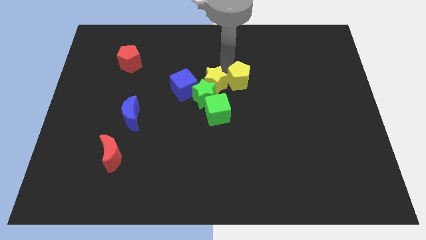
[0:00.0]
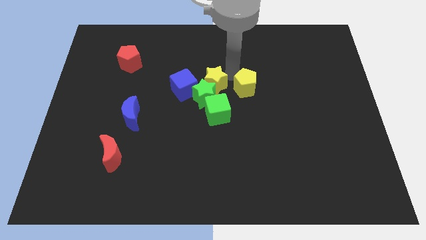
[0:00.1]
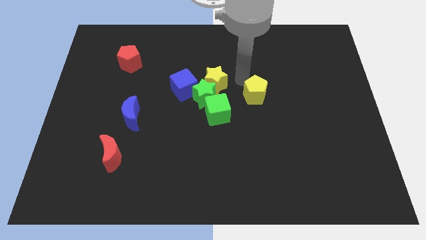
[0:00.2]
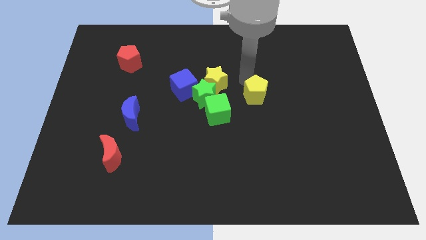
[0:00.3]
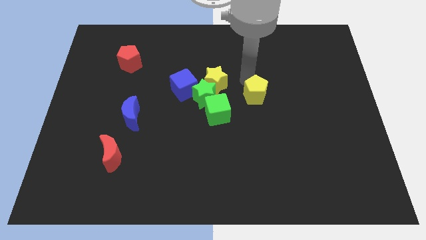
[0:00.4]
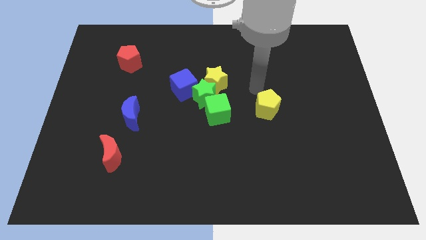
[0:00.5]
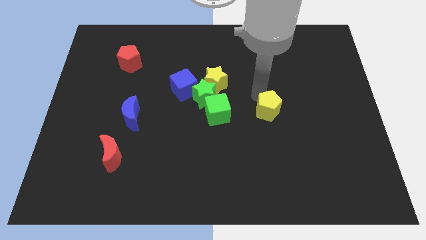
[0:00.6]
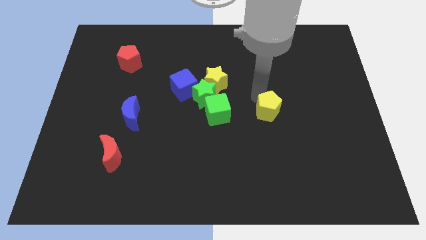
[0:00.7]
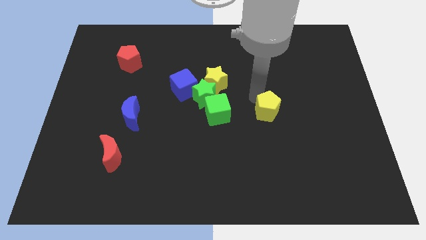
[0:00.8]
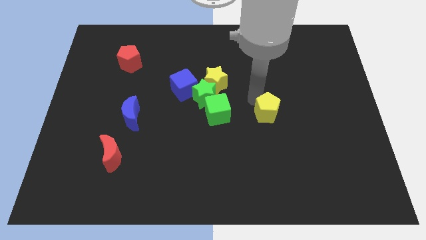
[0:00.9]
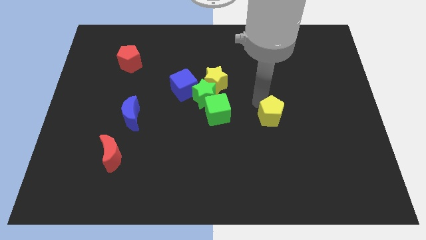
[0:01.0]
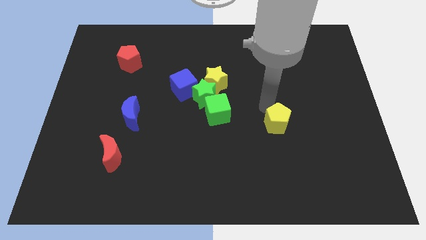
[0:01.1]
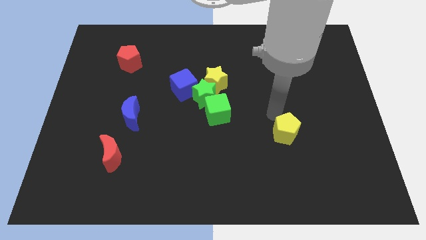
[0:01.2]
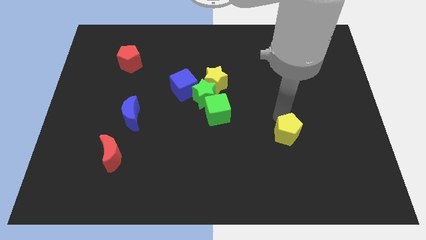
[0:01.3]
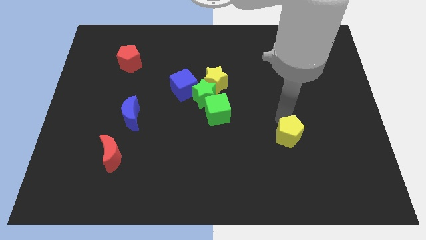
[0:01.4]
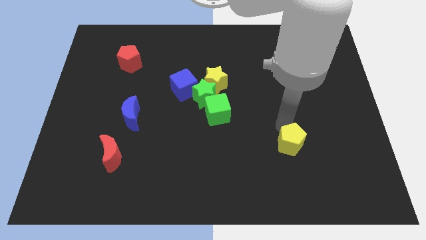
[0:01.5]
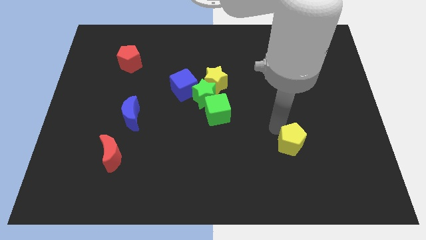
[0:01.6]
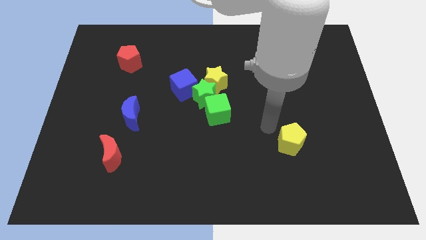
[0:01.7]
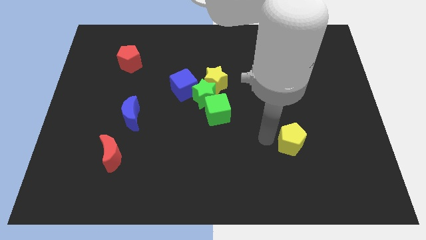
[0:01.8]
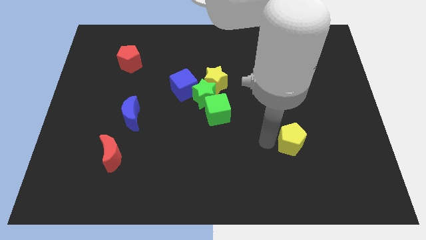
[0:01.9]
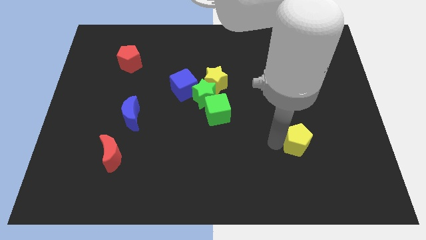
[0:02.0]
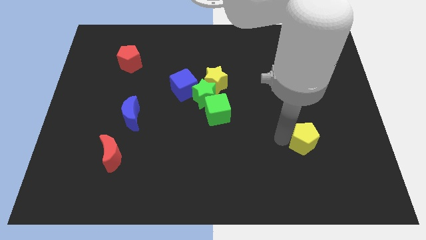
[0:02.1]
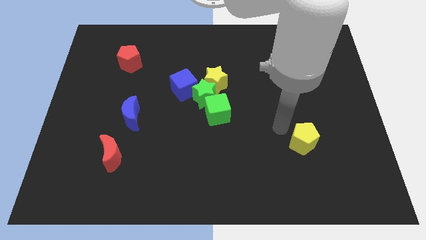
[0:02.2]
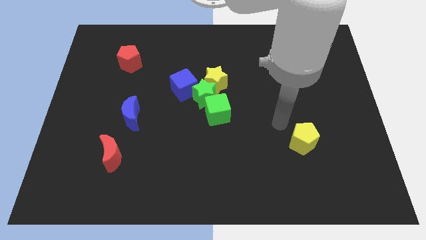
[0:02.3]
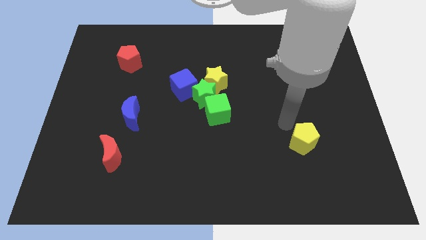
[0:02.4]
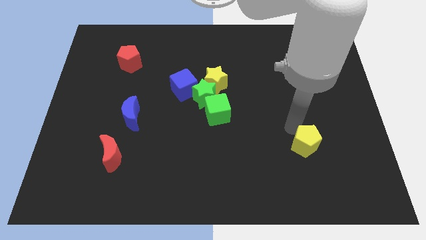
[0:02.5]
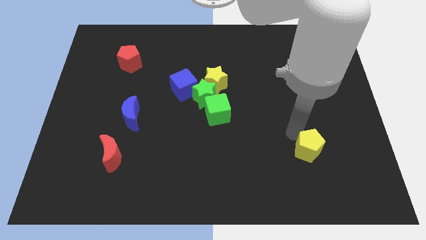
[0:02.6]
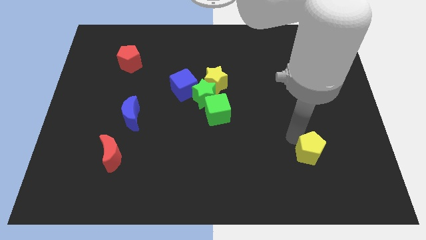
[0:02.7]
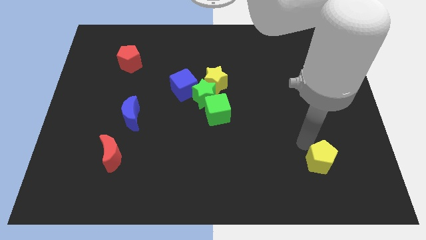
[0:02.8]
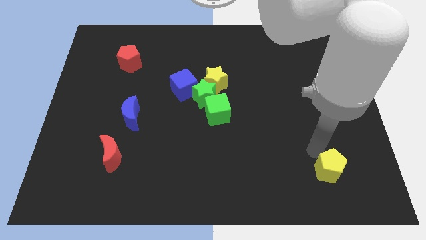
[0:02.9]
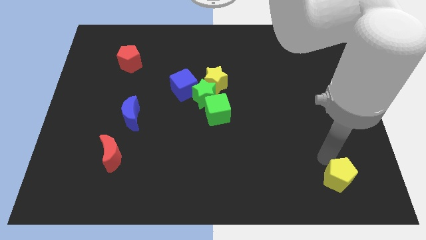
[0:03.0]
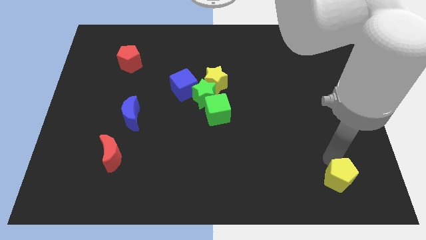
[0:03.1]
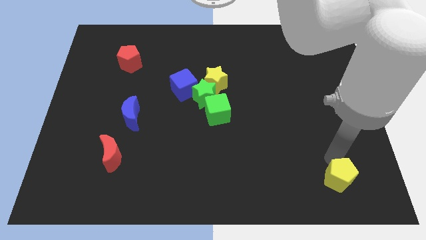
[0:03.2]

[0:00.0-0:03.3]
place the yellow pentagon right to the red moon

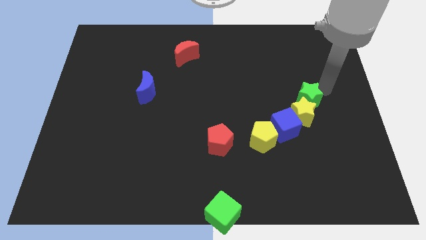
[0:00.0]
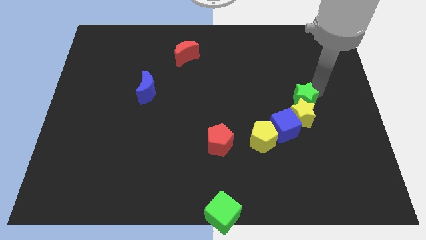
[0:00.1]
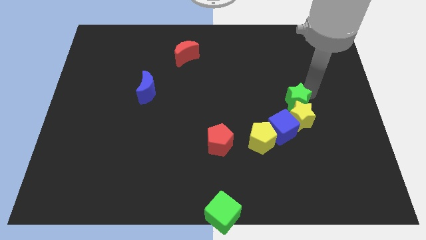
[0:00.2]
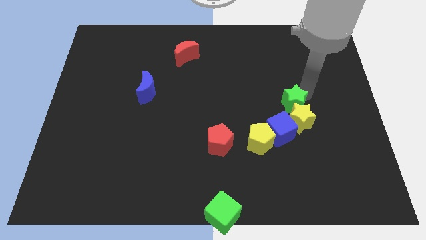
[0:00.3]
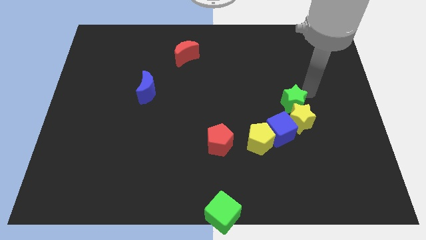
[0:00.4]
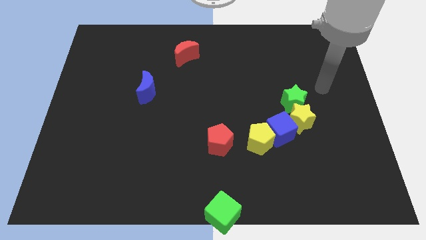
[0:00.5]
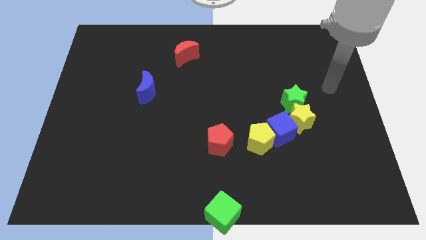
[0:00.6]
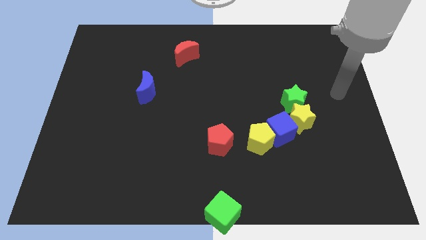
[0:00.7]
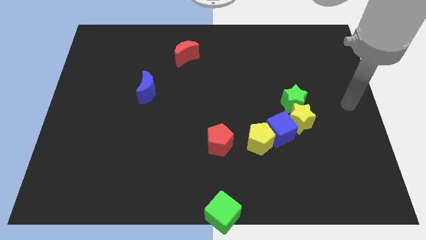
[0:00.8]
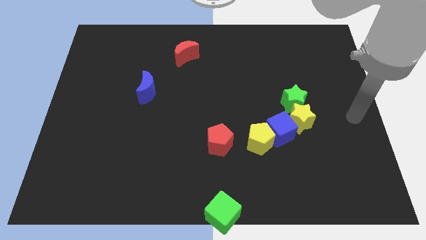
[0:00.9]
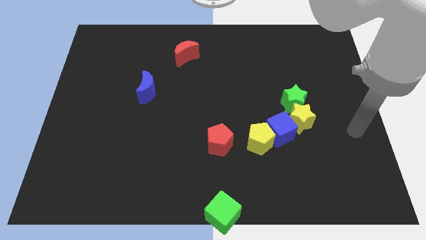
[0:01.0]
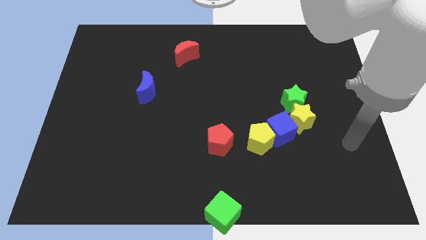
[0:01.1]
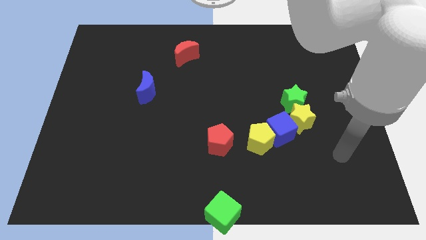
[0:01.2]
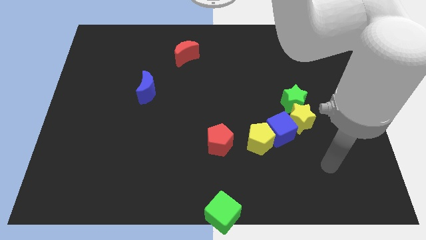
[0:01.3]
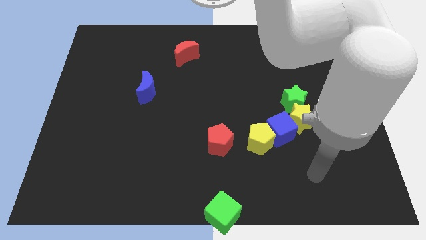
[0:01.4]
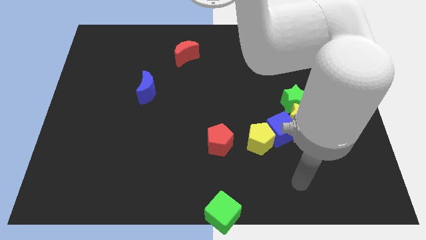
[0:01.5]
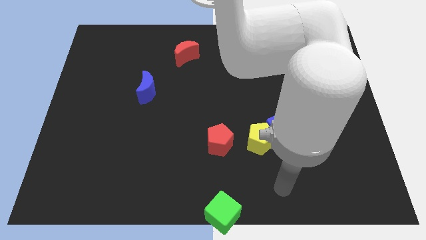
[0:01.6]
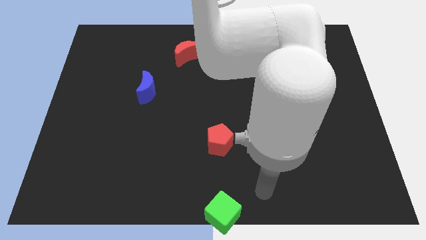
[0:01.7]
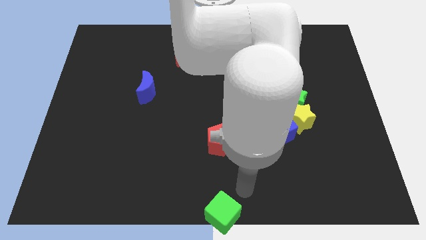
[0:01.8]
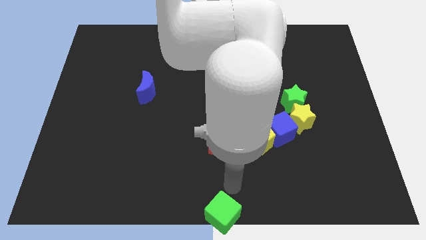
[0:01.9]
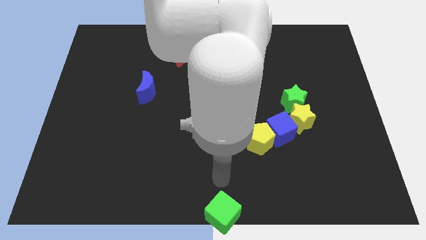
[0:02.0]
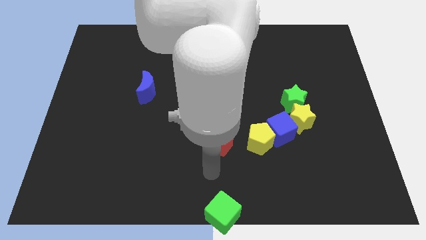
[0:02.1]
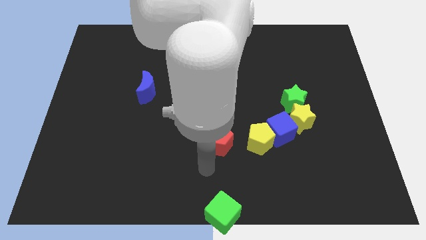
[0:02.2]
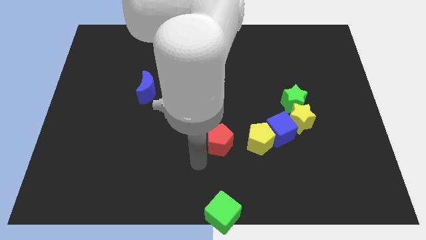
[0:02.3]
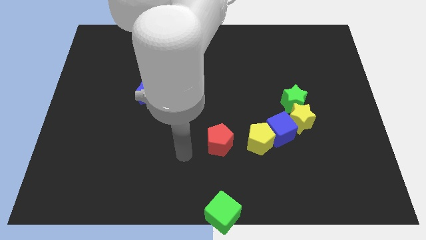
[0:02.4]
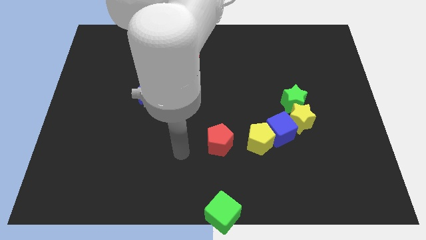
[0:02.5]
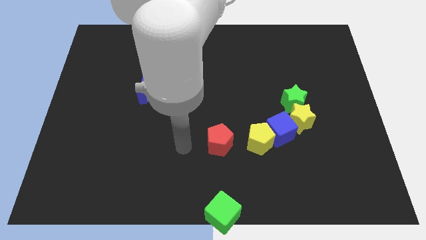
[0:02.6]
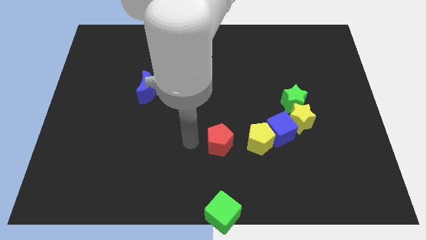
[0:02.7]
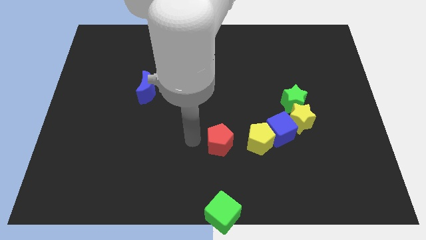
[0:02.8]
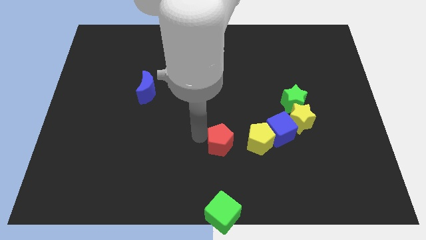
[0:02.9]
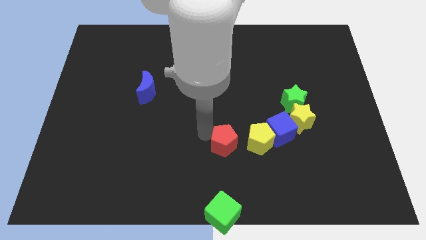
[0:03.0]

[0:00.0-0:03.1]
place the arm left to the red pentagon

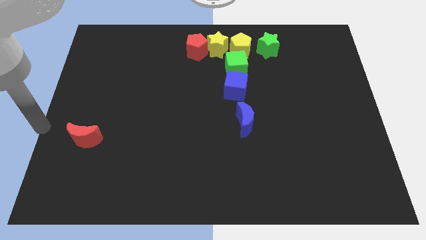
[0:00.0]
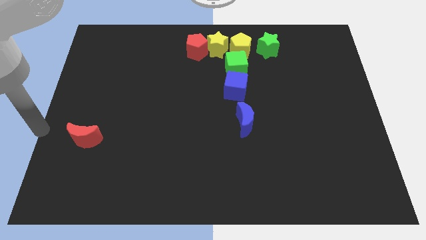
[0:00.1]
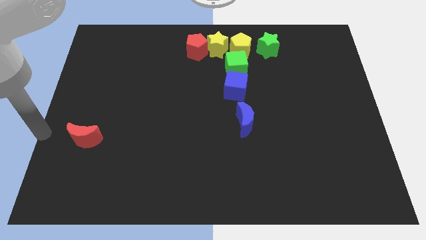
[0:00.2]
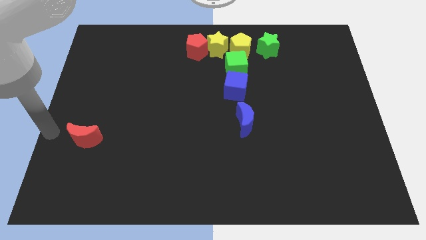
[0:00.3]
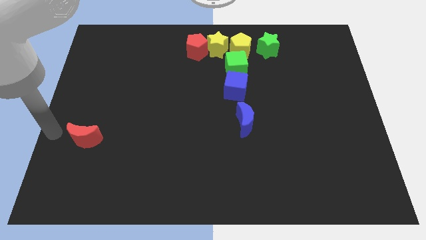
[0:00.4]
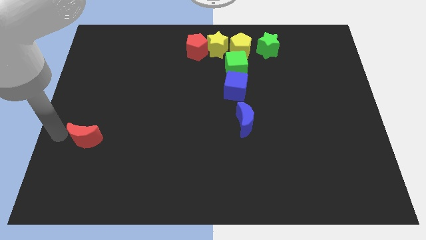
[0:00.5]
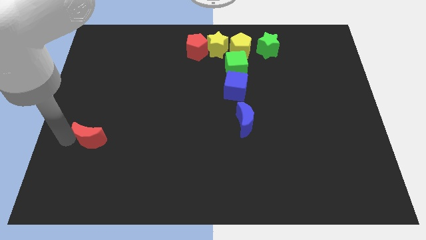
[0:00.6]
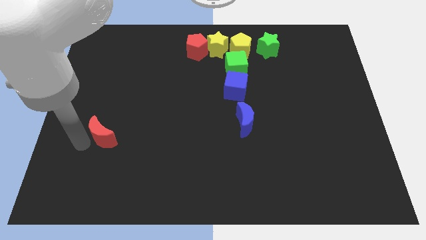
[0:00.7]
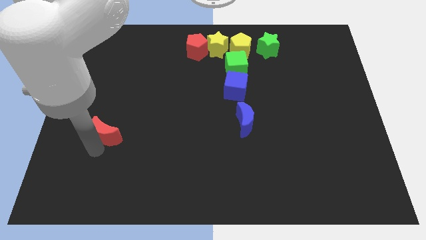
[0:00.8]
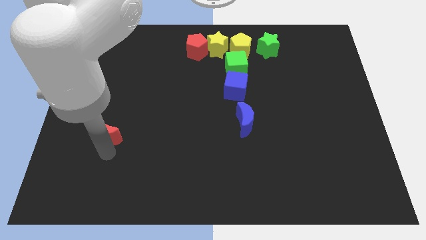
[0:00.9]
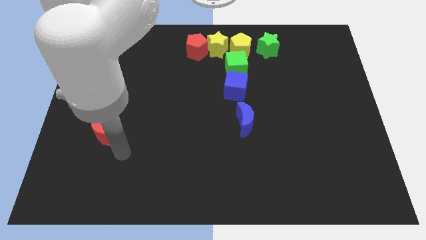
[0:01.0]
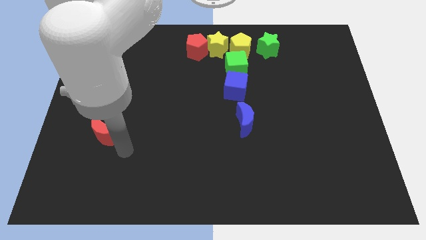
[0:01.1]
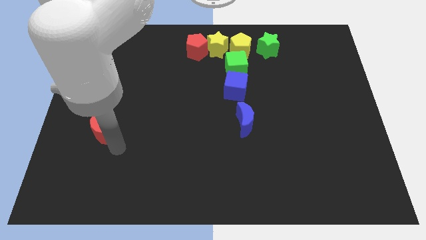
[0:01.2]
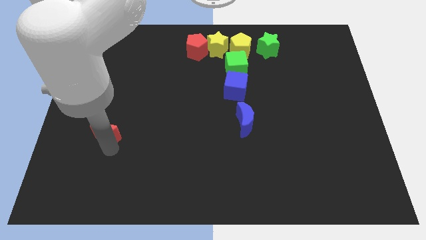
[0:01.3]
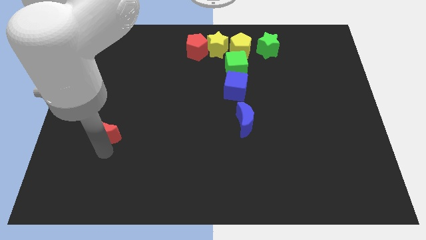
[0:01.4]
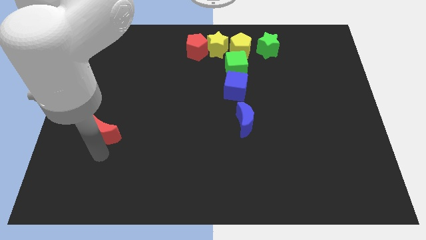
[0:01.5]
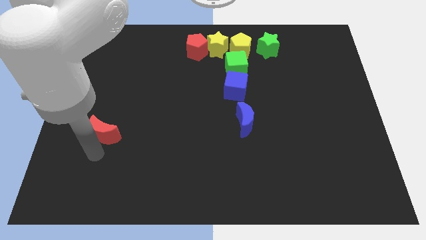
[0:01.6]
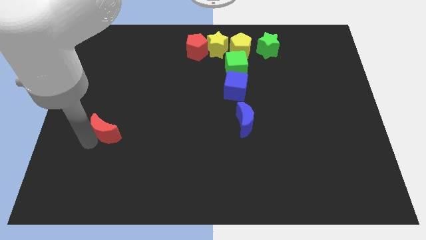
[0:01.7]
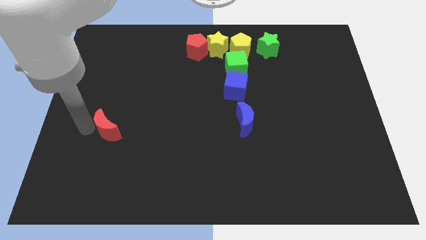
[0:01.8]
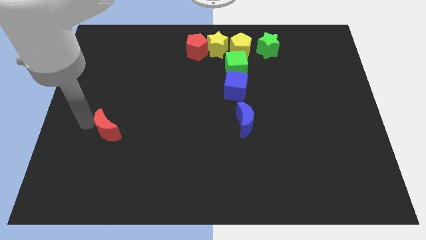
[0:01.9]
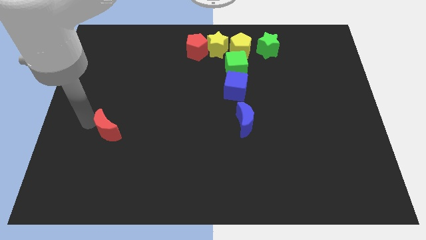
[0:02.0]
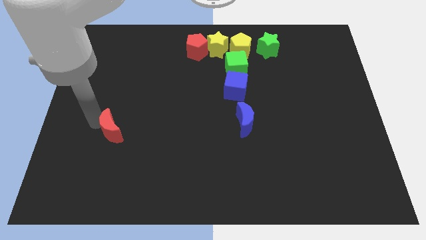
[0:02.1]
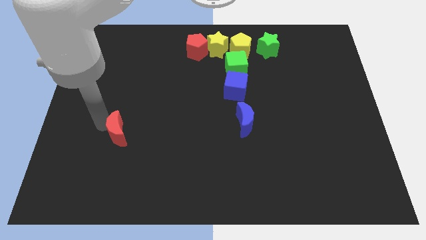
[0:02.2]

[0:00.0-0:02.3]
move the red crescent slightly to the right side
